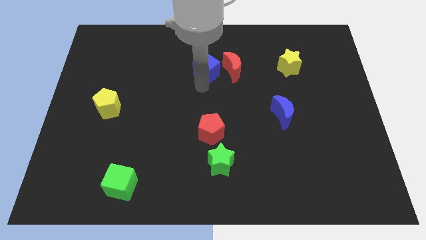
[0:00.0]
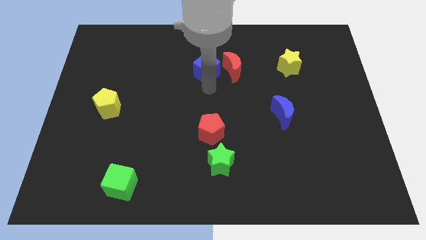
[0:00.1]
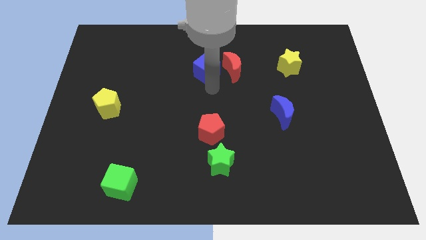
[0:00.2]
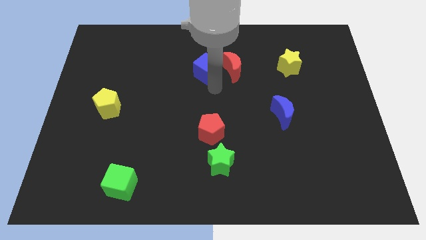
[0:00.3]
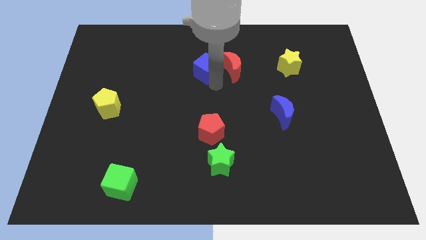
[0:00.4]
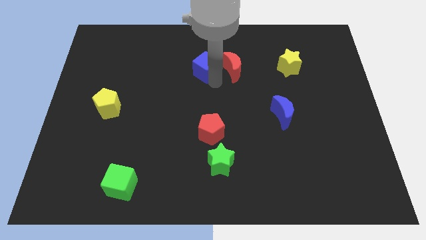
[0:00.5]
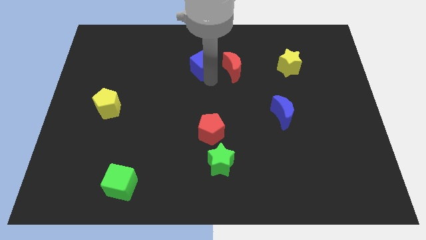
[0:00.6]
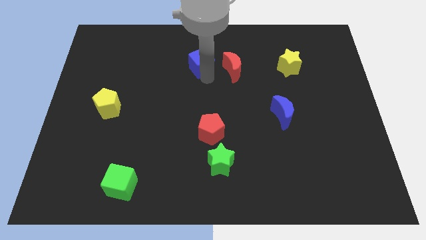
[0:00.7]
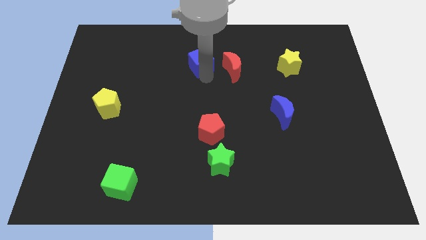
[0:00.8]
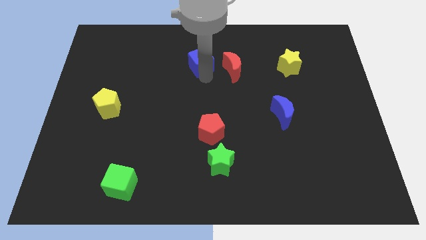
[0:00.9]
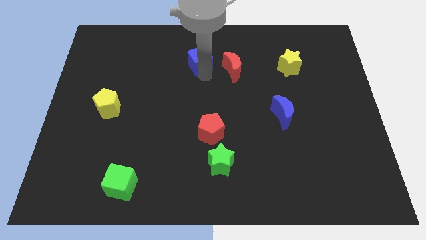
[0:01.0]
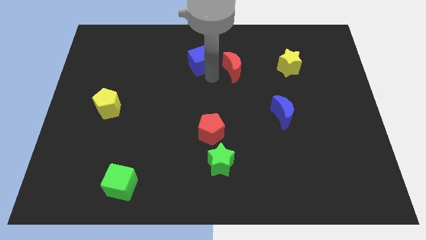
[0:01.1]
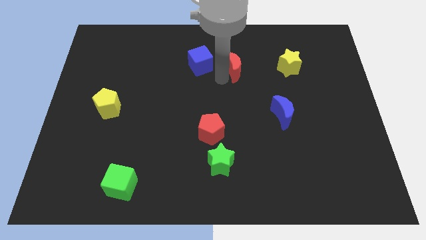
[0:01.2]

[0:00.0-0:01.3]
move slightly away blue cube from red crescent

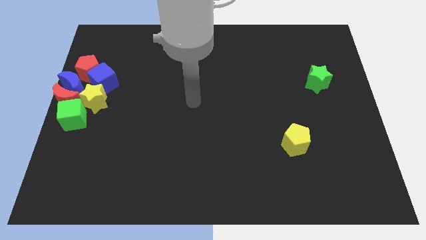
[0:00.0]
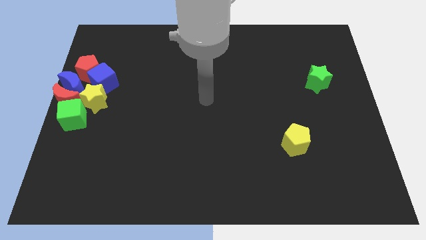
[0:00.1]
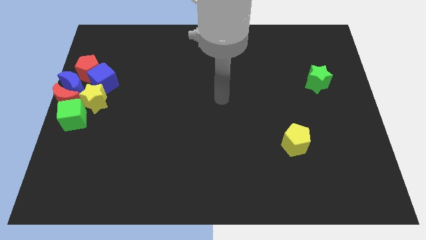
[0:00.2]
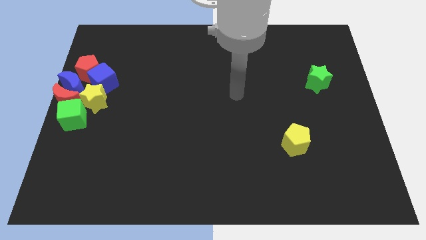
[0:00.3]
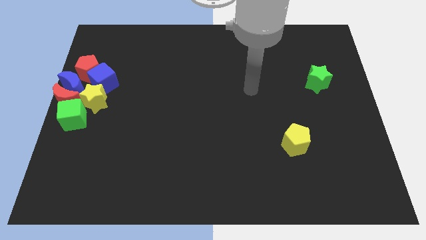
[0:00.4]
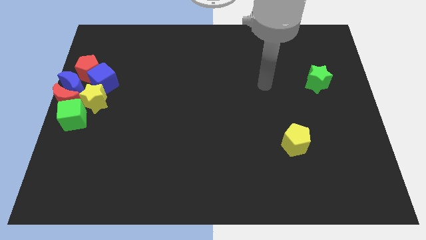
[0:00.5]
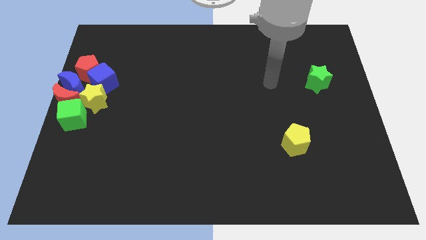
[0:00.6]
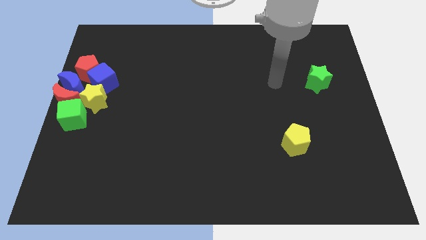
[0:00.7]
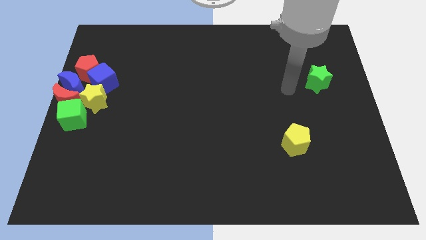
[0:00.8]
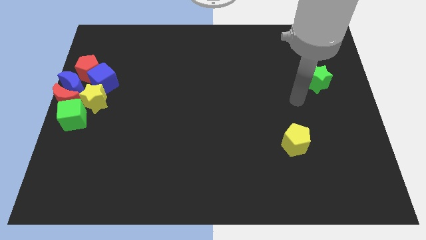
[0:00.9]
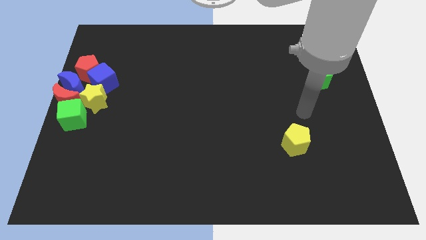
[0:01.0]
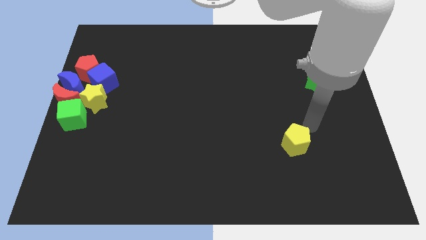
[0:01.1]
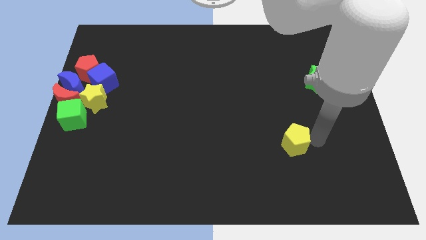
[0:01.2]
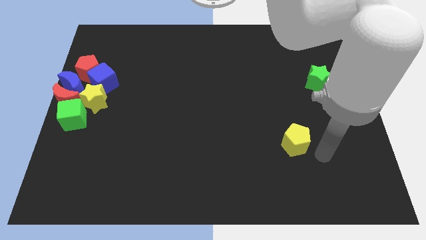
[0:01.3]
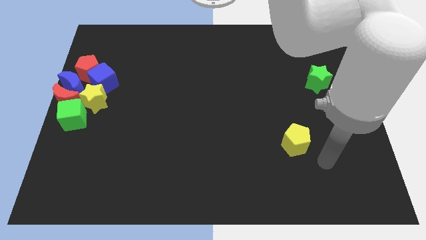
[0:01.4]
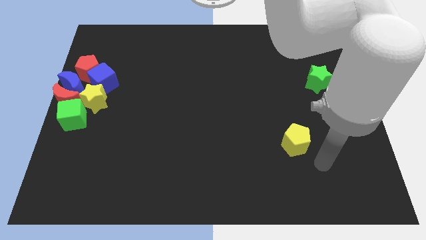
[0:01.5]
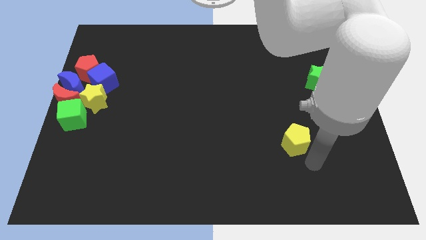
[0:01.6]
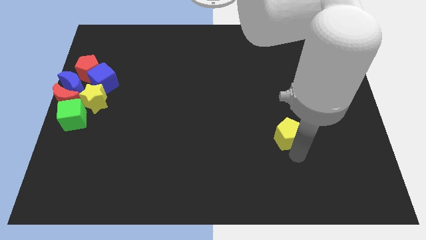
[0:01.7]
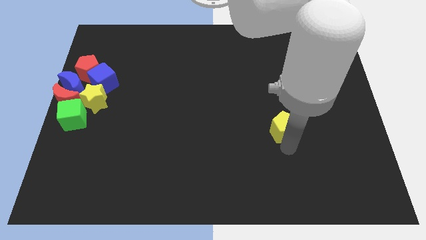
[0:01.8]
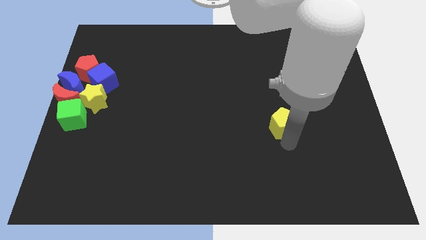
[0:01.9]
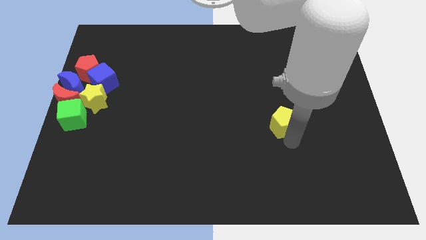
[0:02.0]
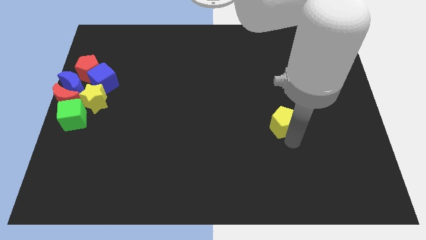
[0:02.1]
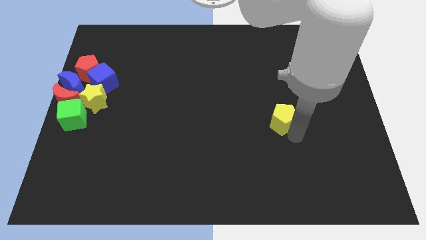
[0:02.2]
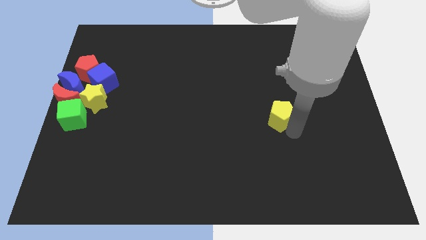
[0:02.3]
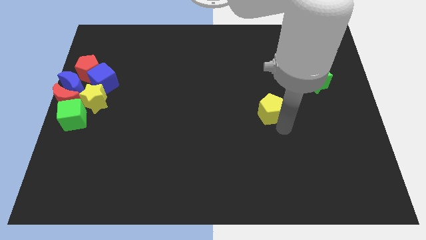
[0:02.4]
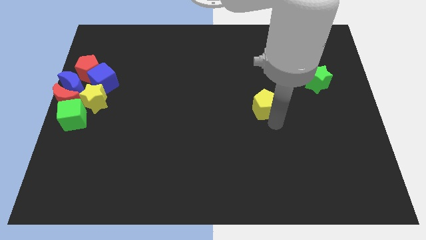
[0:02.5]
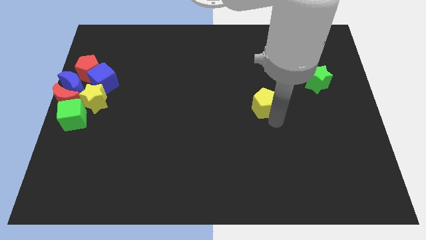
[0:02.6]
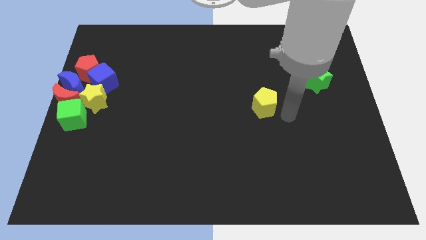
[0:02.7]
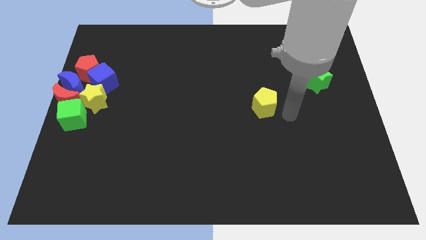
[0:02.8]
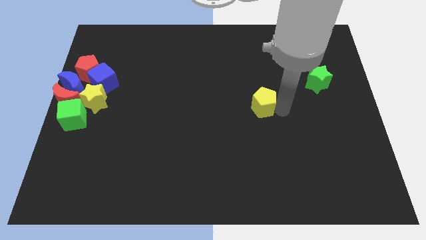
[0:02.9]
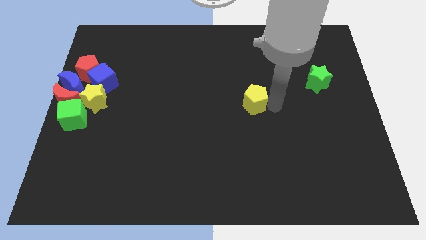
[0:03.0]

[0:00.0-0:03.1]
move yellow pentagon slightly upward

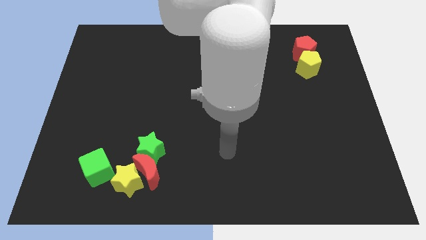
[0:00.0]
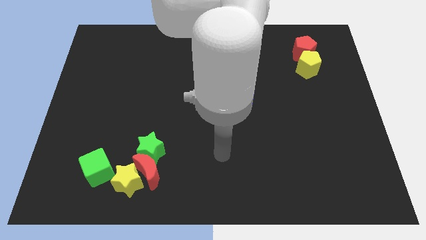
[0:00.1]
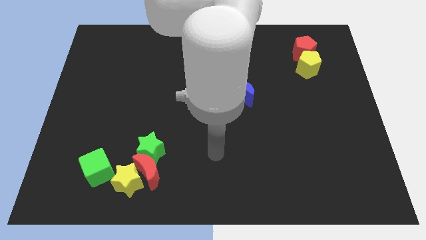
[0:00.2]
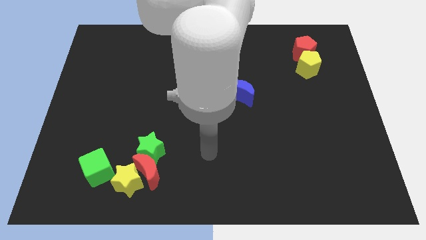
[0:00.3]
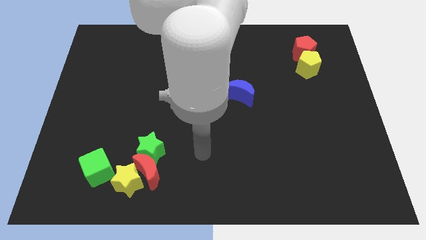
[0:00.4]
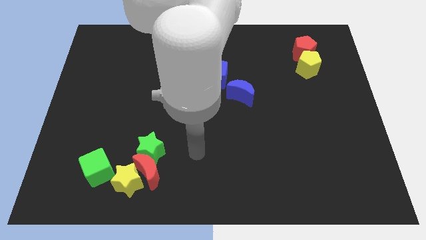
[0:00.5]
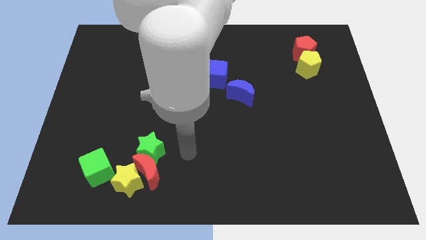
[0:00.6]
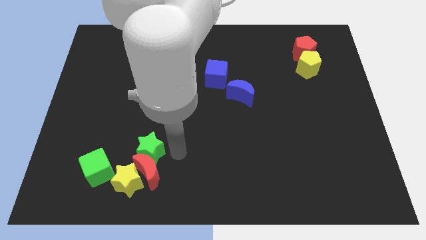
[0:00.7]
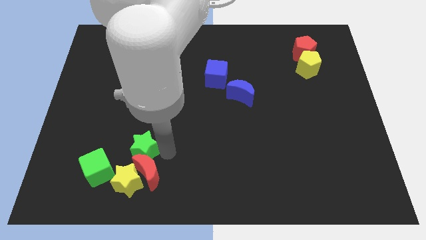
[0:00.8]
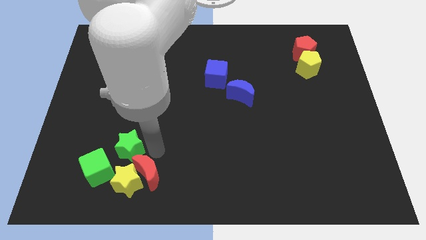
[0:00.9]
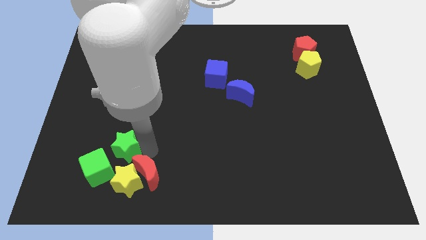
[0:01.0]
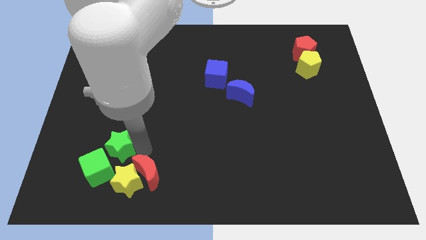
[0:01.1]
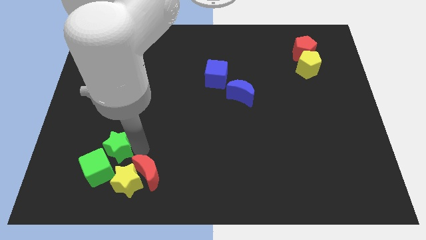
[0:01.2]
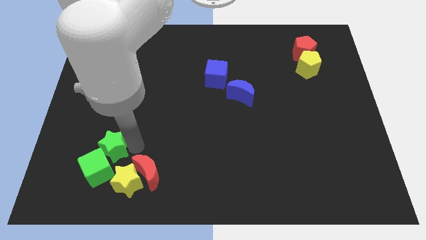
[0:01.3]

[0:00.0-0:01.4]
slide the green star to the left

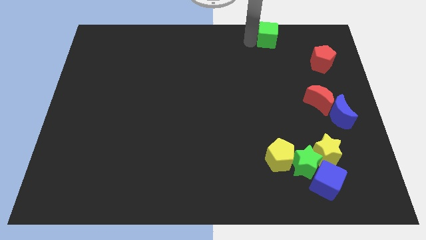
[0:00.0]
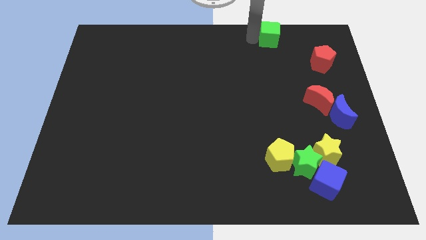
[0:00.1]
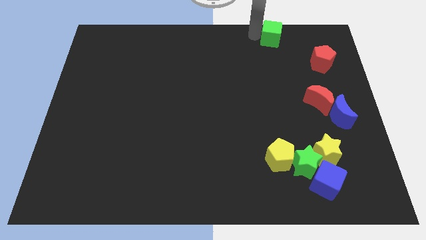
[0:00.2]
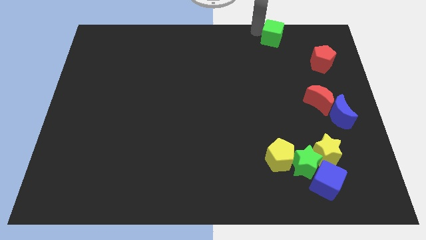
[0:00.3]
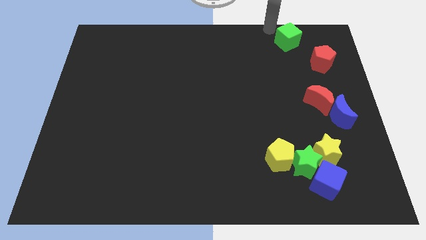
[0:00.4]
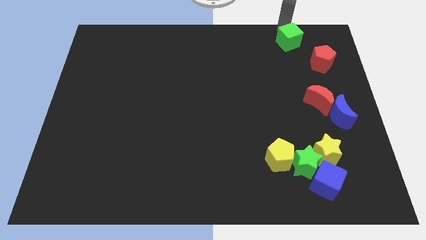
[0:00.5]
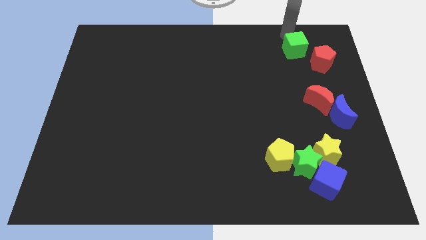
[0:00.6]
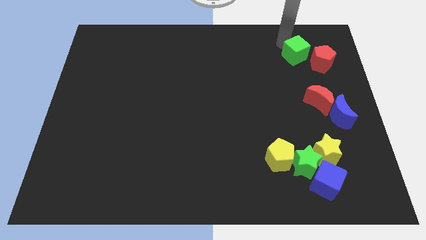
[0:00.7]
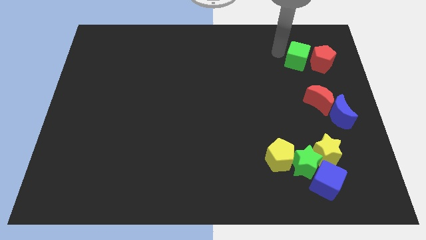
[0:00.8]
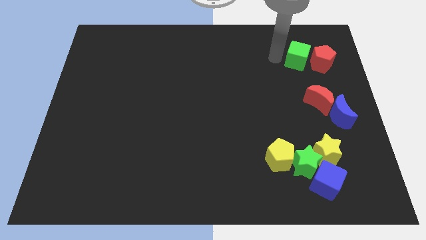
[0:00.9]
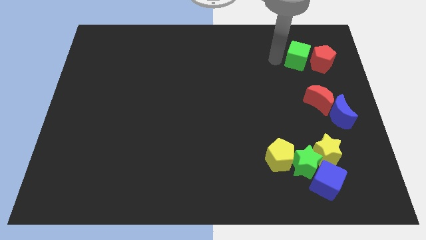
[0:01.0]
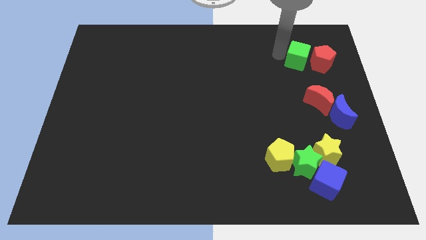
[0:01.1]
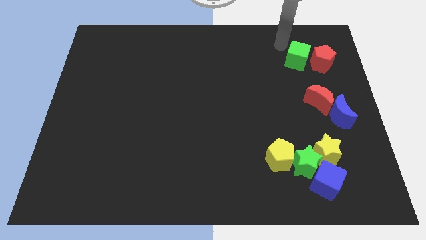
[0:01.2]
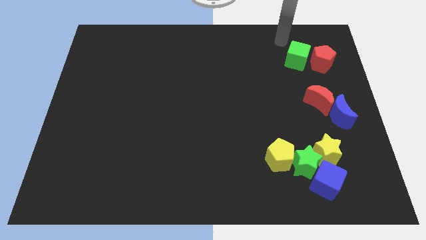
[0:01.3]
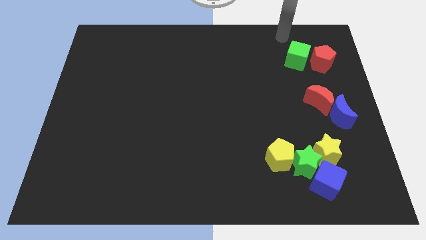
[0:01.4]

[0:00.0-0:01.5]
place the green cube to the left of the red pentagon

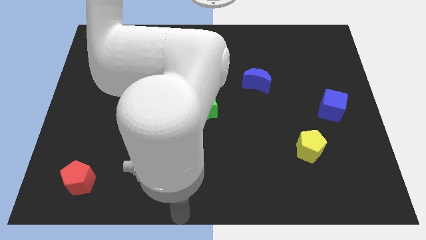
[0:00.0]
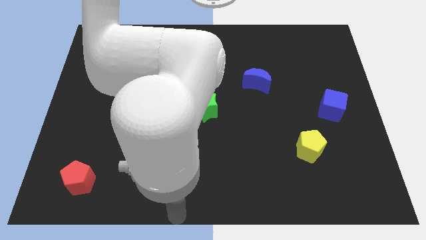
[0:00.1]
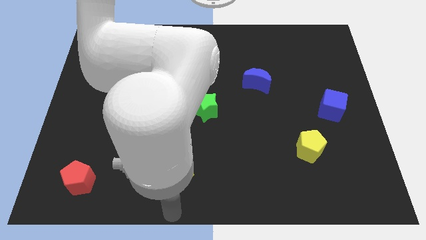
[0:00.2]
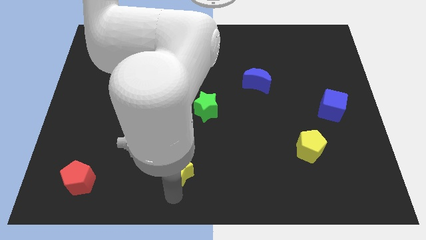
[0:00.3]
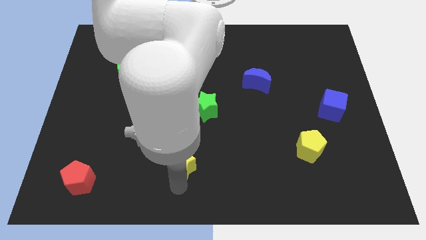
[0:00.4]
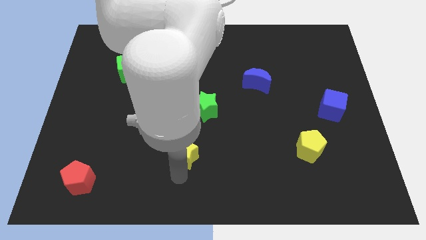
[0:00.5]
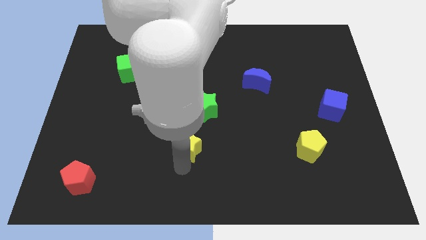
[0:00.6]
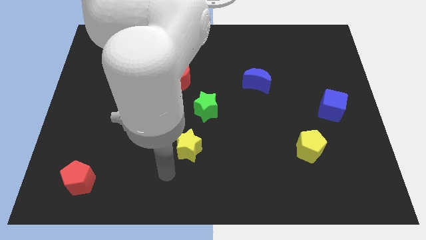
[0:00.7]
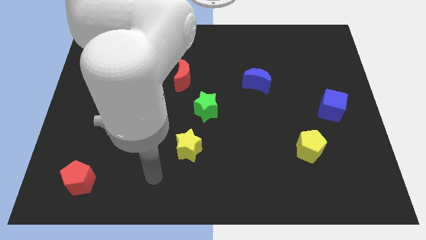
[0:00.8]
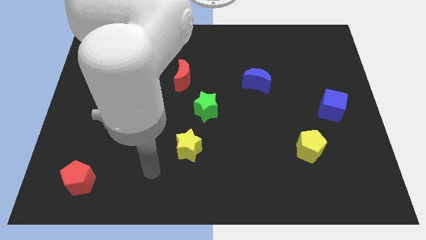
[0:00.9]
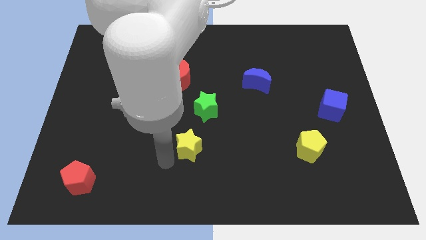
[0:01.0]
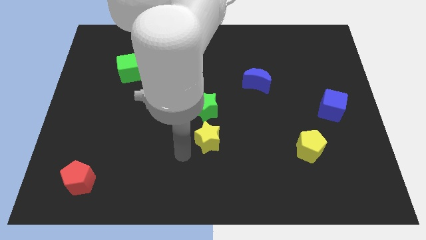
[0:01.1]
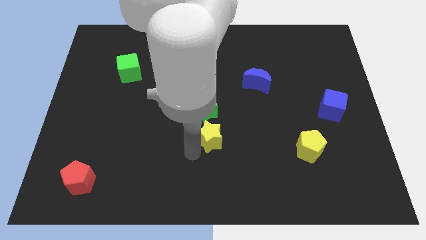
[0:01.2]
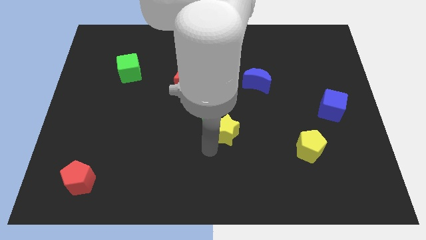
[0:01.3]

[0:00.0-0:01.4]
move yellow star towards green star

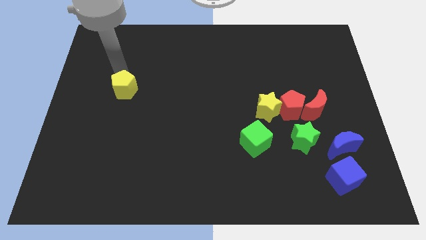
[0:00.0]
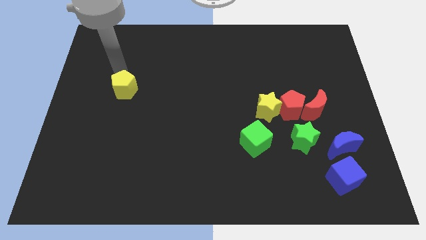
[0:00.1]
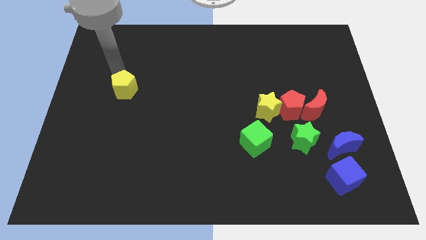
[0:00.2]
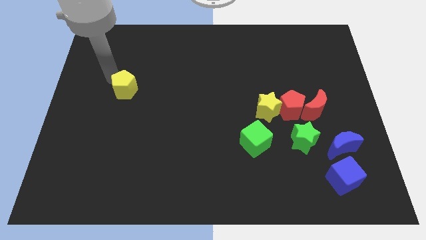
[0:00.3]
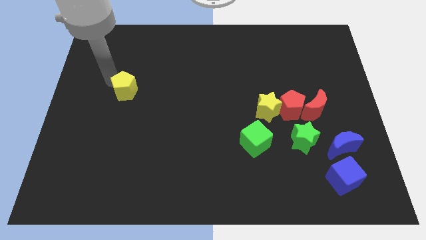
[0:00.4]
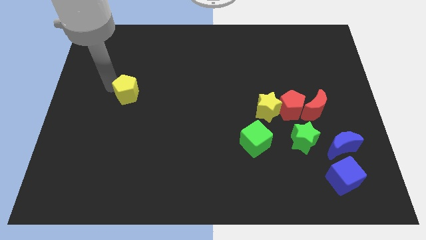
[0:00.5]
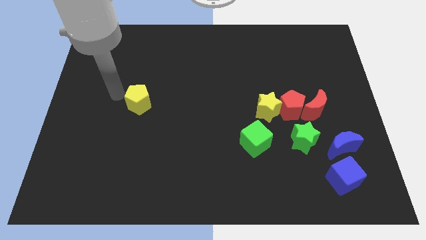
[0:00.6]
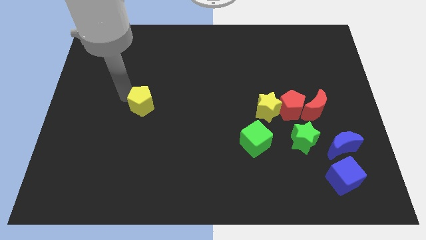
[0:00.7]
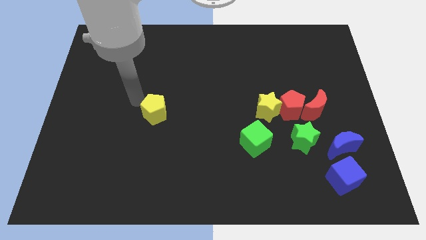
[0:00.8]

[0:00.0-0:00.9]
move yellow pentagon to the center
